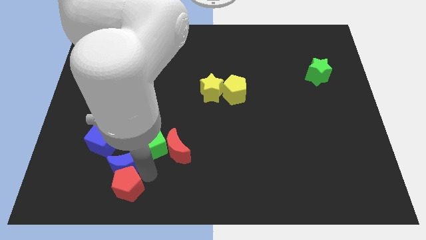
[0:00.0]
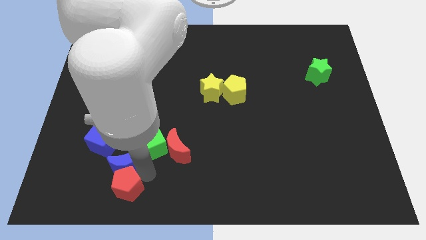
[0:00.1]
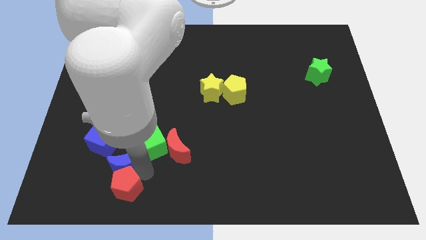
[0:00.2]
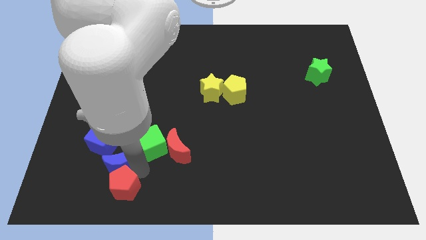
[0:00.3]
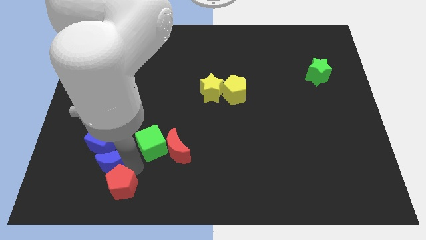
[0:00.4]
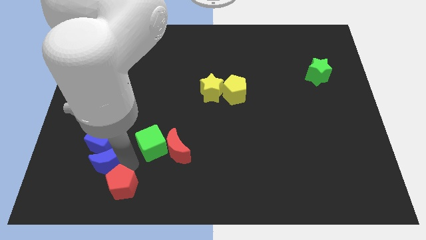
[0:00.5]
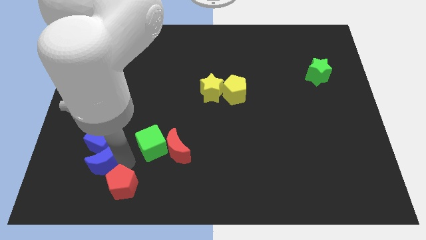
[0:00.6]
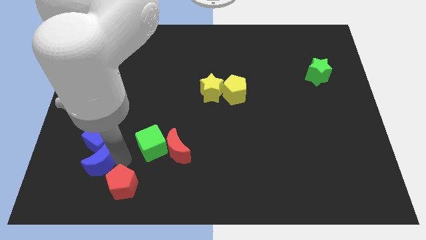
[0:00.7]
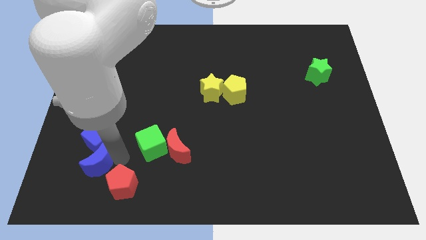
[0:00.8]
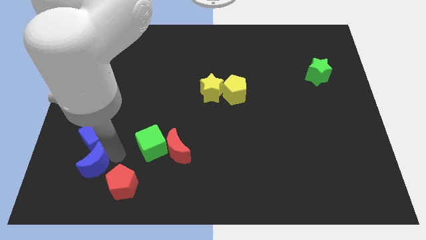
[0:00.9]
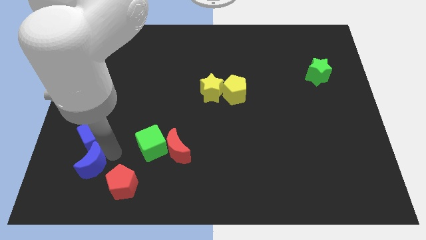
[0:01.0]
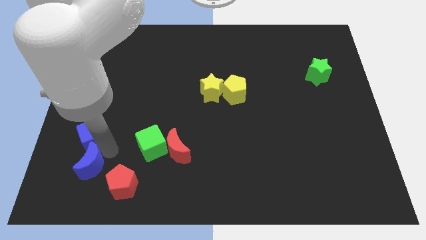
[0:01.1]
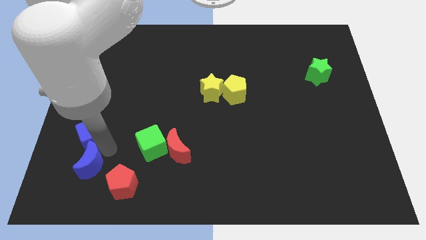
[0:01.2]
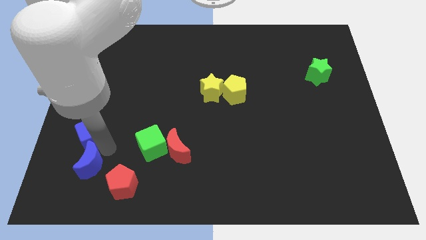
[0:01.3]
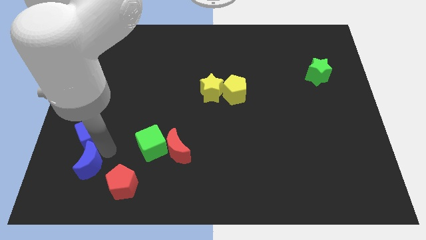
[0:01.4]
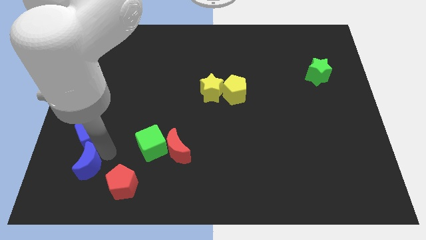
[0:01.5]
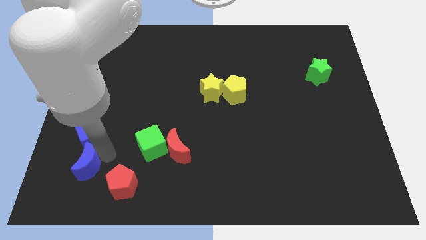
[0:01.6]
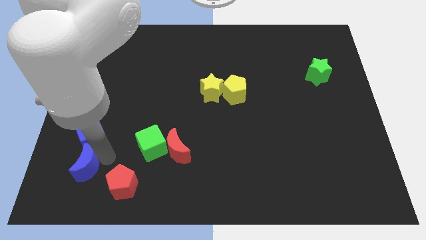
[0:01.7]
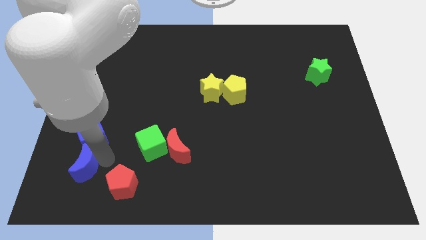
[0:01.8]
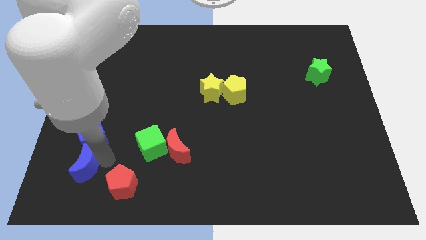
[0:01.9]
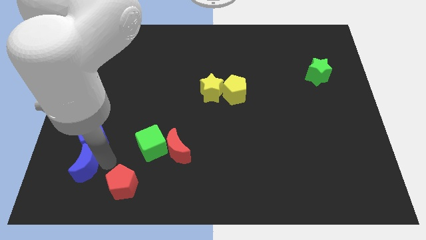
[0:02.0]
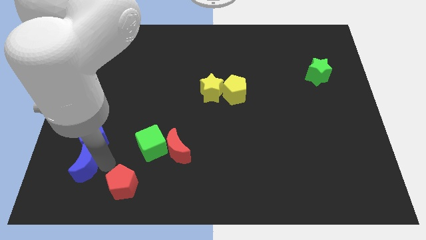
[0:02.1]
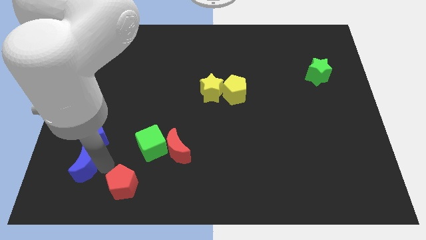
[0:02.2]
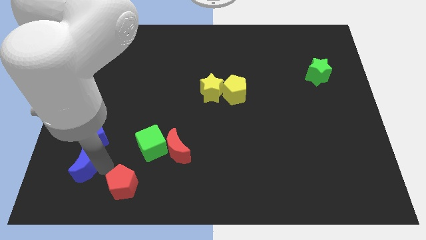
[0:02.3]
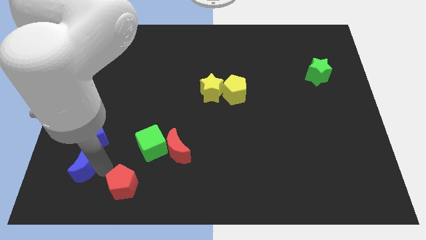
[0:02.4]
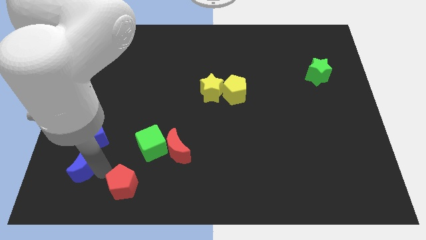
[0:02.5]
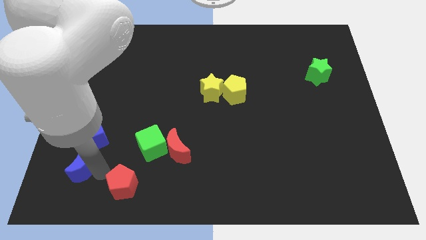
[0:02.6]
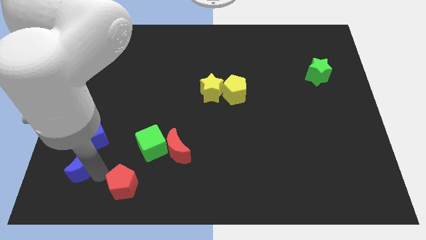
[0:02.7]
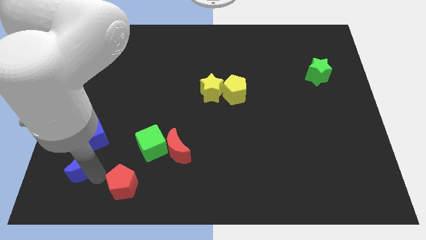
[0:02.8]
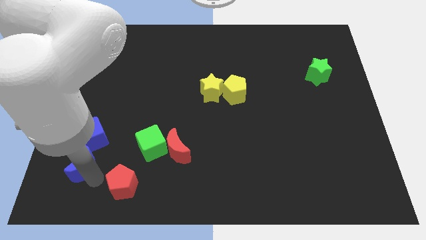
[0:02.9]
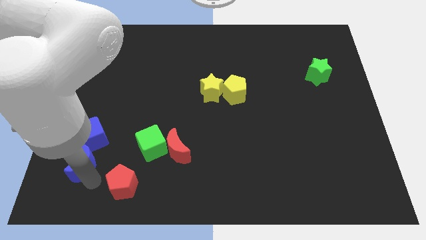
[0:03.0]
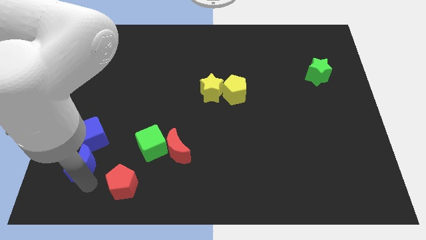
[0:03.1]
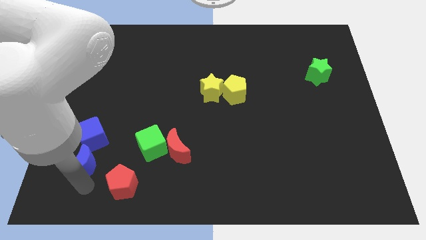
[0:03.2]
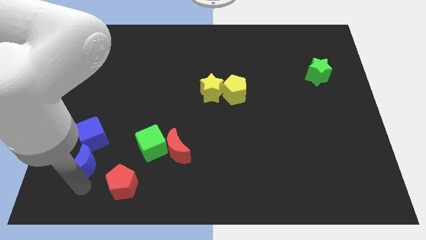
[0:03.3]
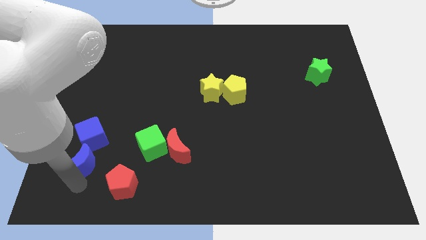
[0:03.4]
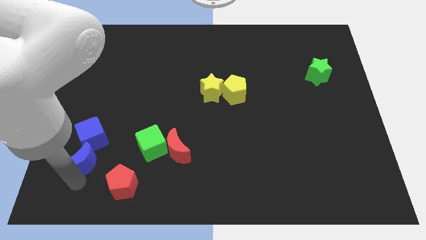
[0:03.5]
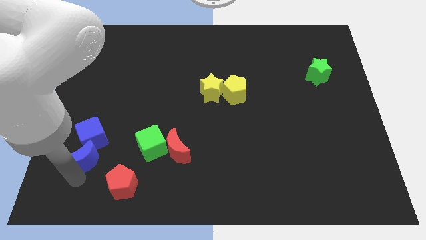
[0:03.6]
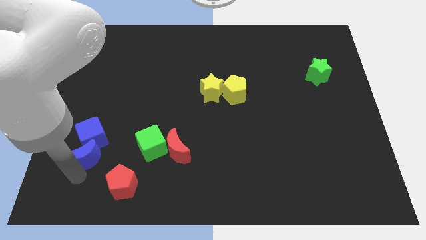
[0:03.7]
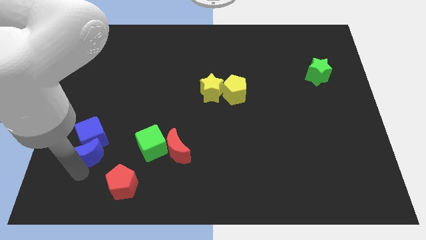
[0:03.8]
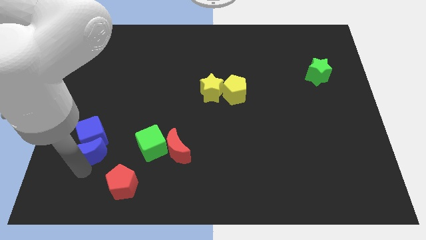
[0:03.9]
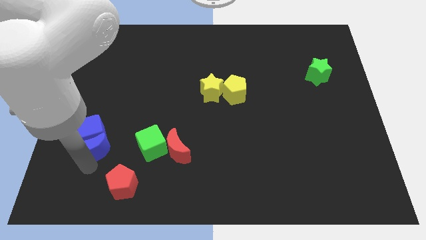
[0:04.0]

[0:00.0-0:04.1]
push blue crescent into blue cube

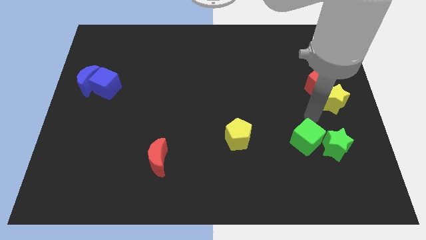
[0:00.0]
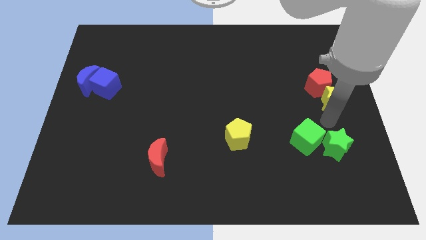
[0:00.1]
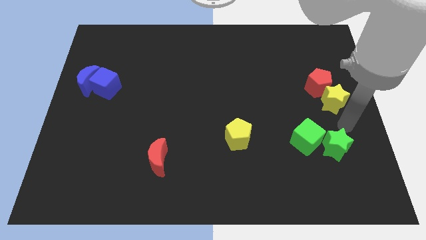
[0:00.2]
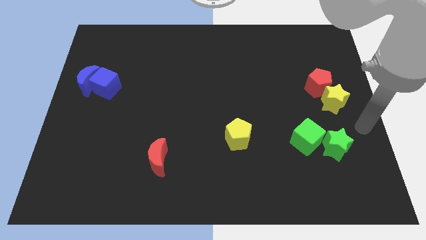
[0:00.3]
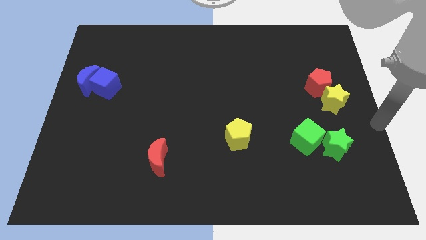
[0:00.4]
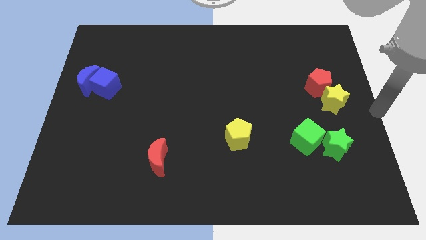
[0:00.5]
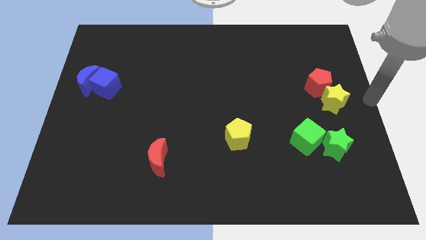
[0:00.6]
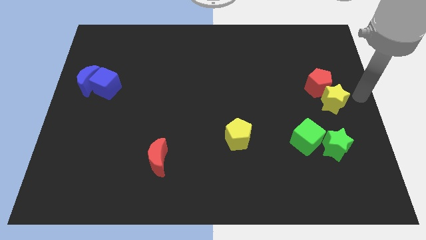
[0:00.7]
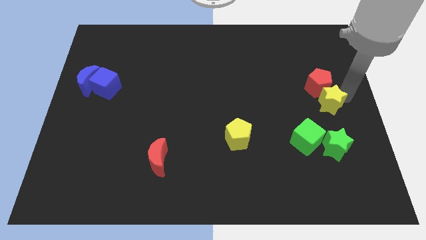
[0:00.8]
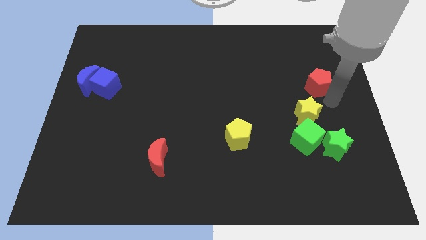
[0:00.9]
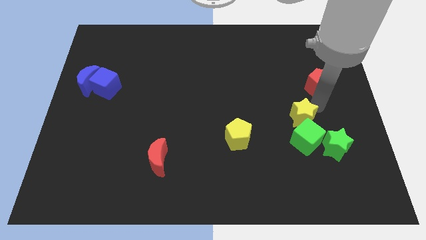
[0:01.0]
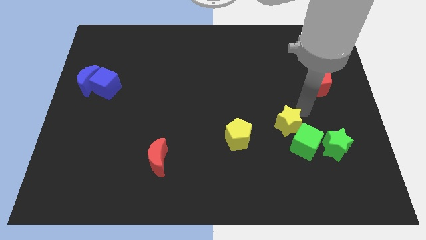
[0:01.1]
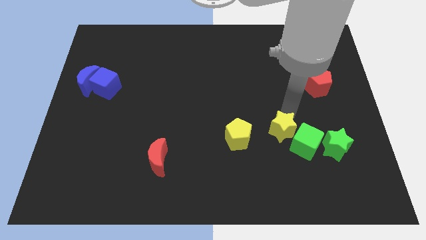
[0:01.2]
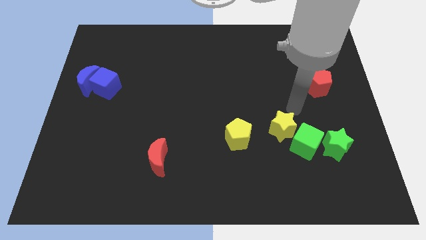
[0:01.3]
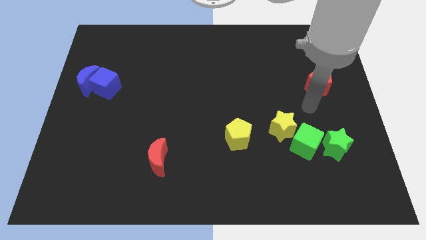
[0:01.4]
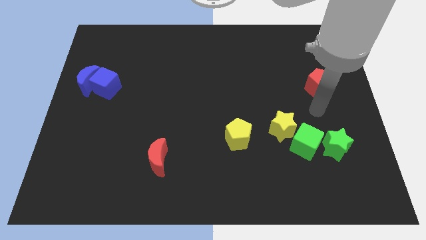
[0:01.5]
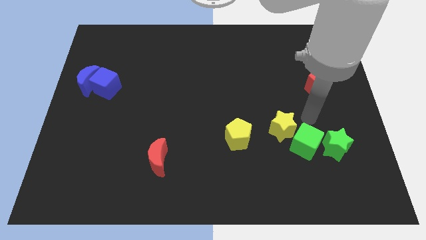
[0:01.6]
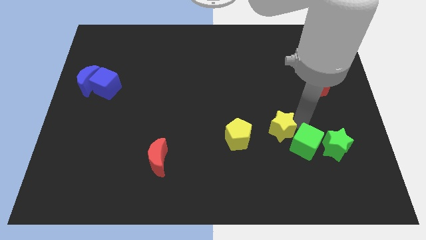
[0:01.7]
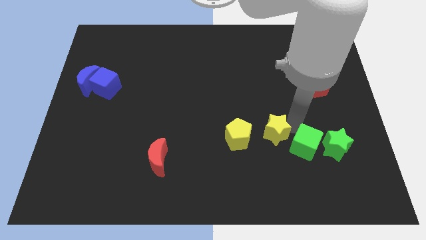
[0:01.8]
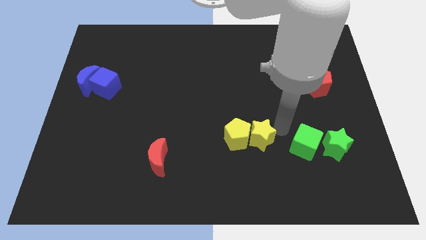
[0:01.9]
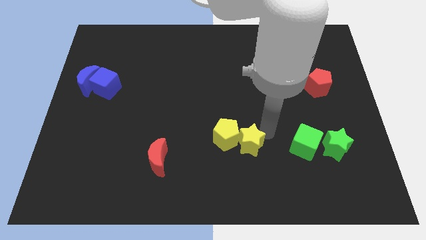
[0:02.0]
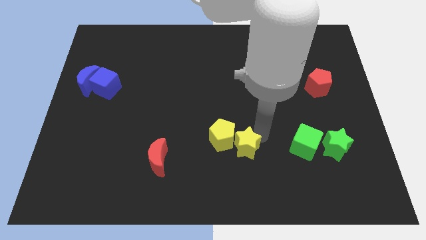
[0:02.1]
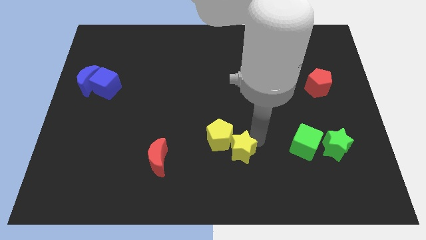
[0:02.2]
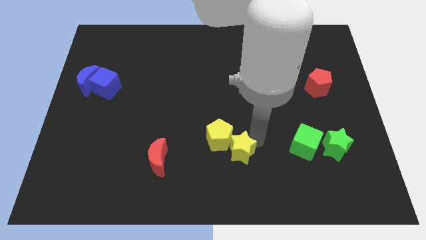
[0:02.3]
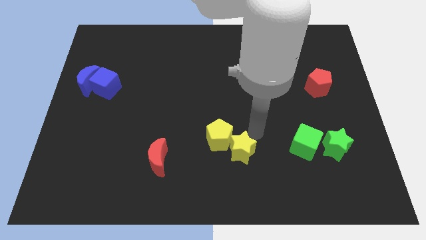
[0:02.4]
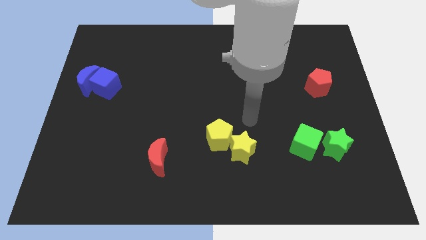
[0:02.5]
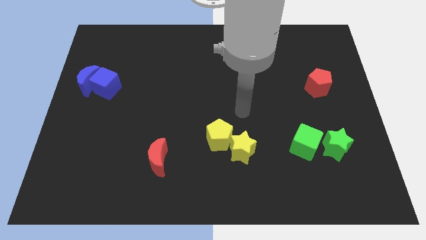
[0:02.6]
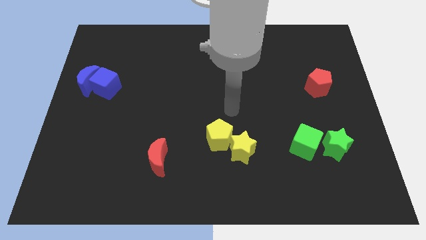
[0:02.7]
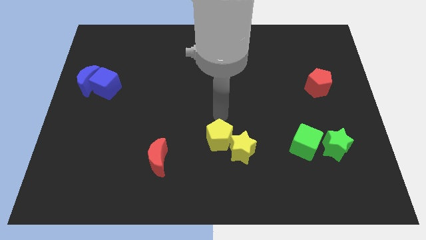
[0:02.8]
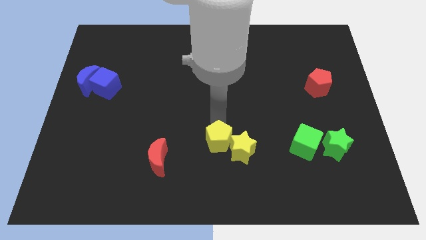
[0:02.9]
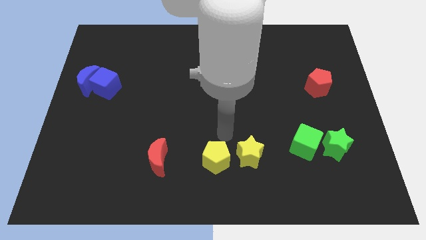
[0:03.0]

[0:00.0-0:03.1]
place the yellow blocks in between the red moon and green cube

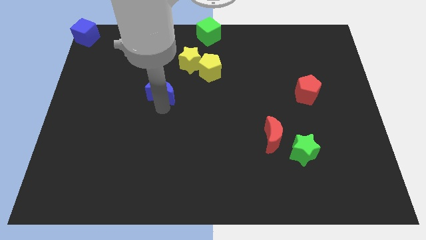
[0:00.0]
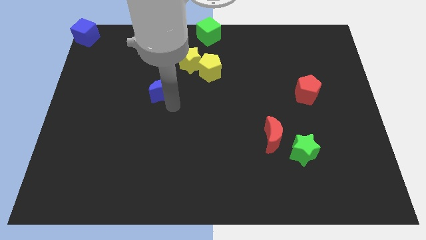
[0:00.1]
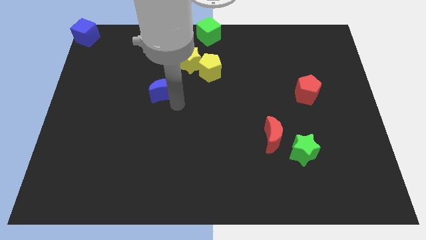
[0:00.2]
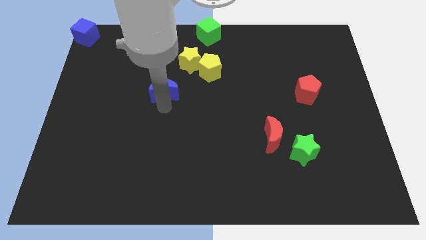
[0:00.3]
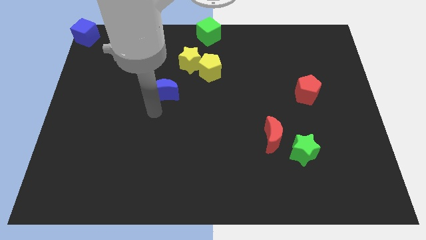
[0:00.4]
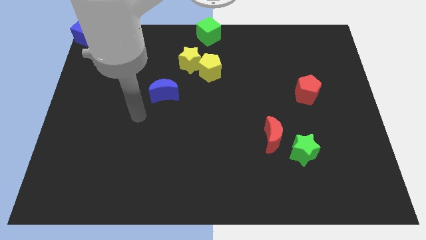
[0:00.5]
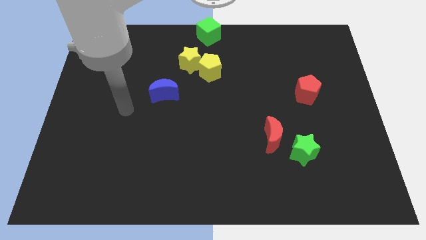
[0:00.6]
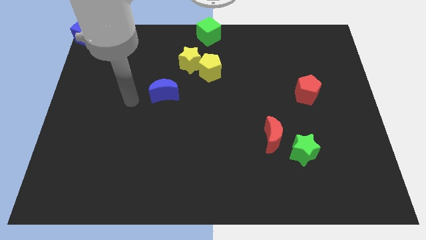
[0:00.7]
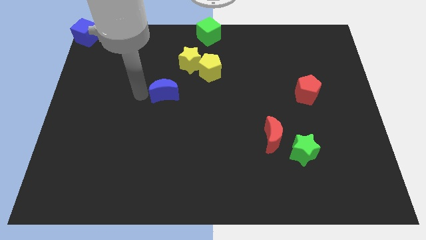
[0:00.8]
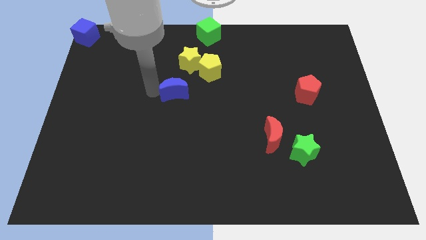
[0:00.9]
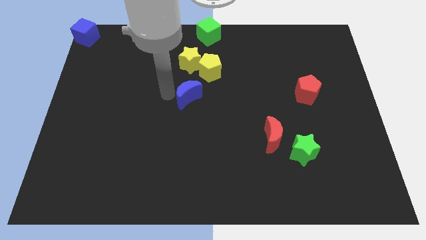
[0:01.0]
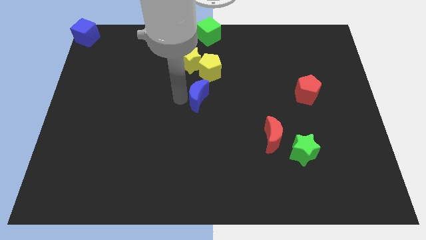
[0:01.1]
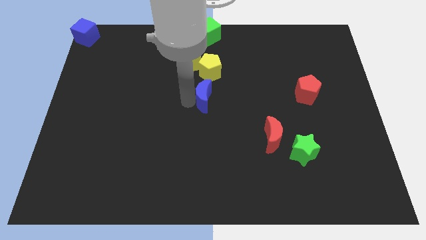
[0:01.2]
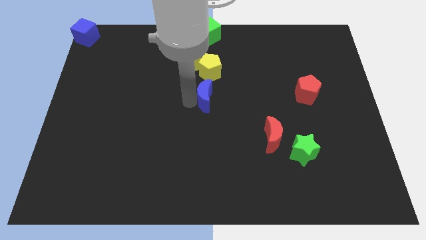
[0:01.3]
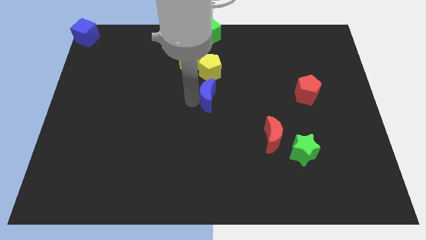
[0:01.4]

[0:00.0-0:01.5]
move blue moon below yellow pentagon

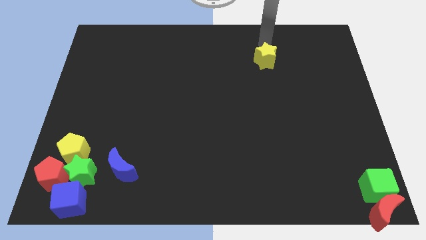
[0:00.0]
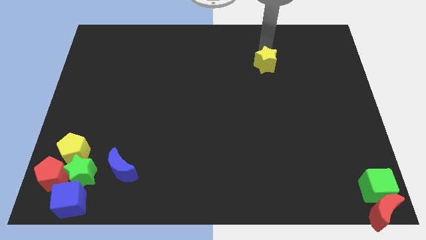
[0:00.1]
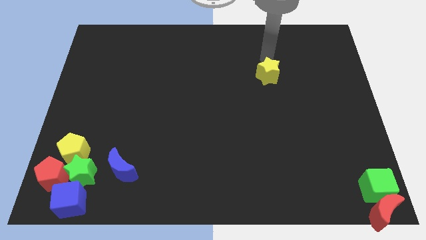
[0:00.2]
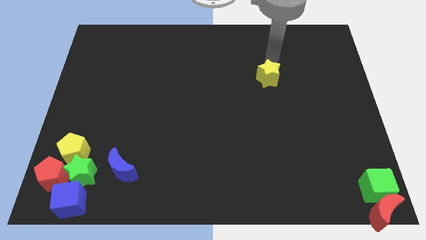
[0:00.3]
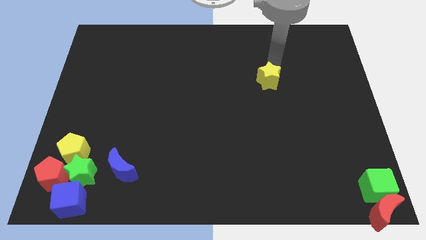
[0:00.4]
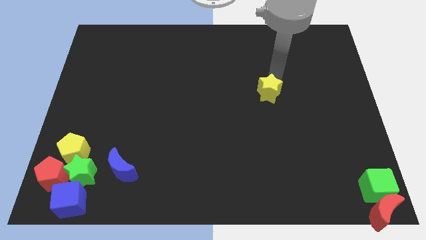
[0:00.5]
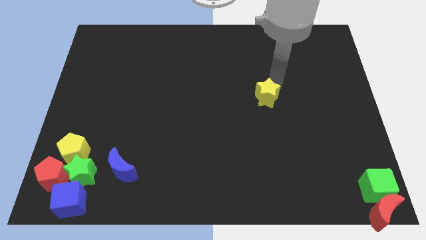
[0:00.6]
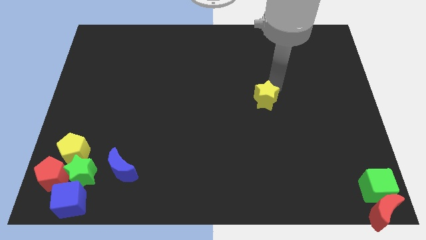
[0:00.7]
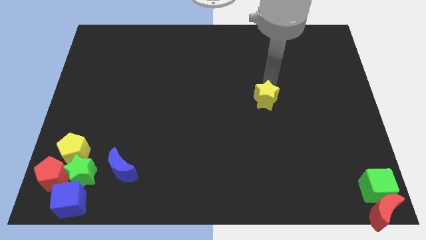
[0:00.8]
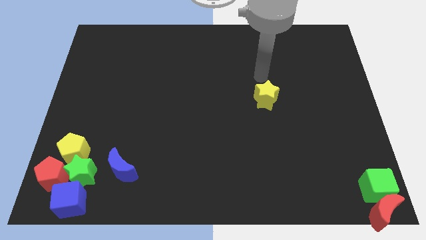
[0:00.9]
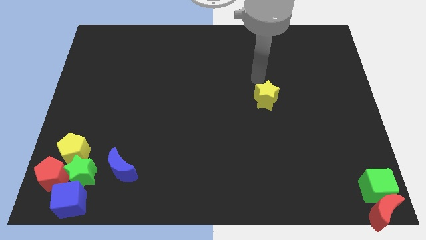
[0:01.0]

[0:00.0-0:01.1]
slide yellow star a bit down
